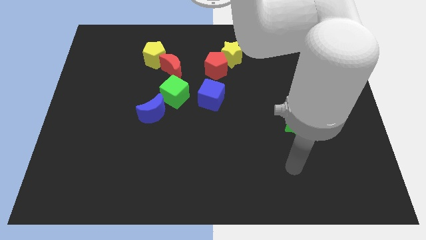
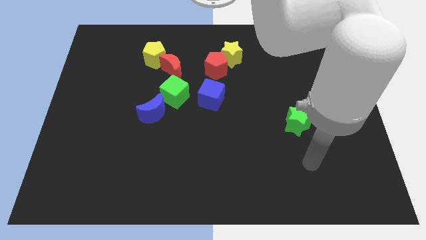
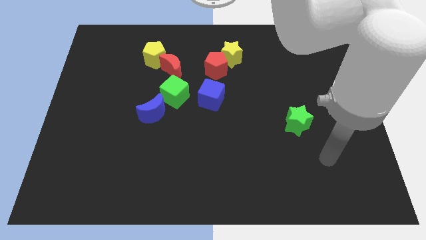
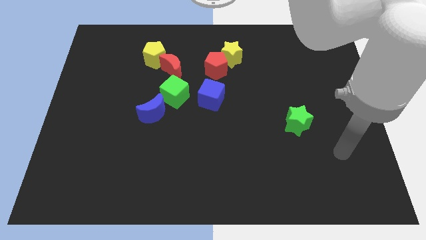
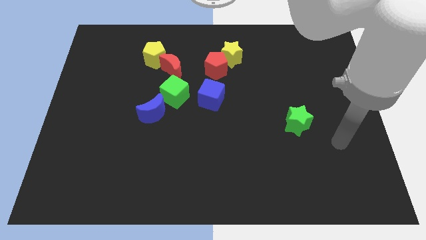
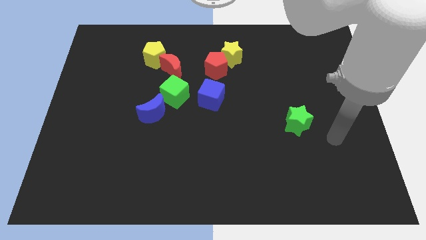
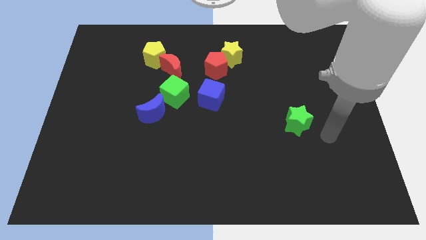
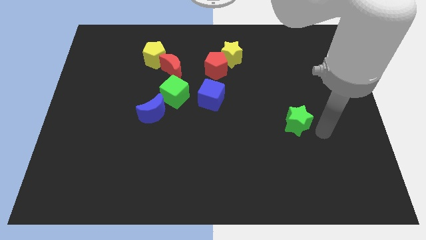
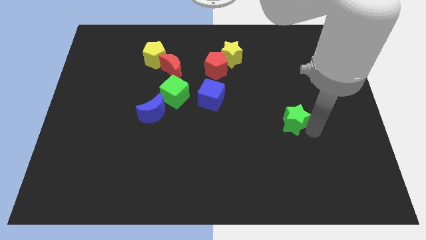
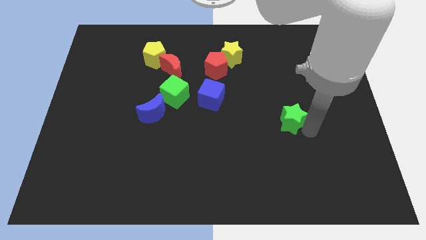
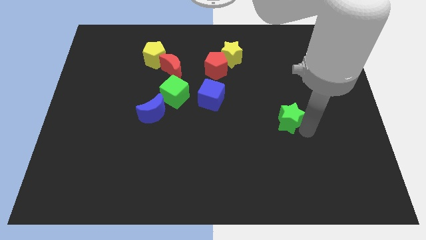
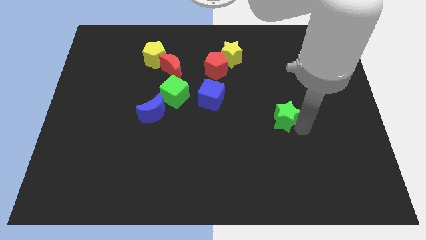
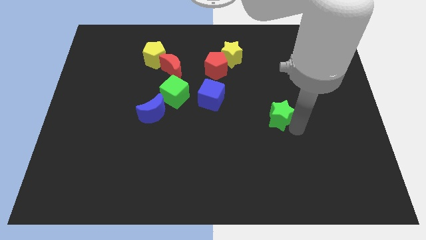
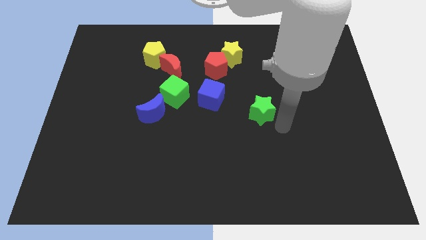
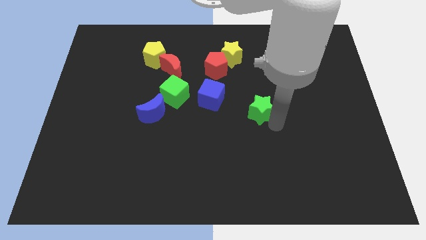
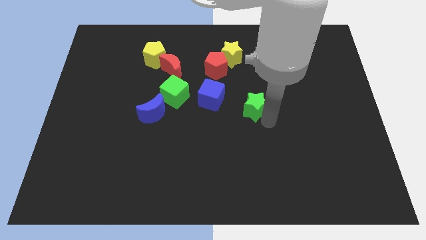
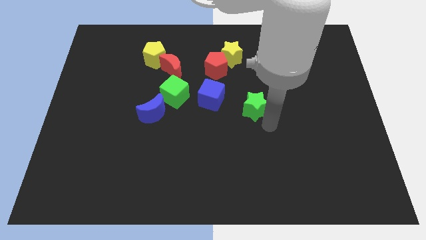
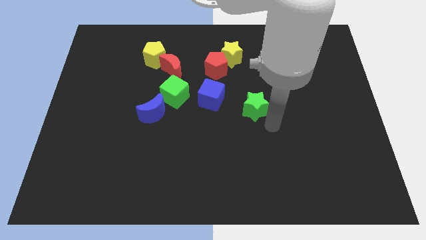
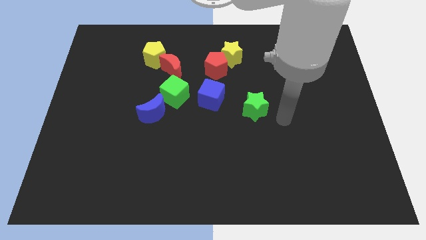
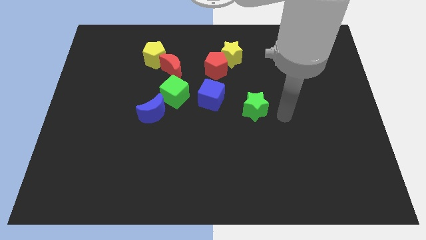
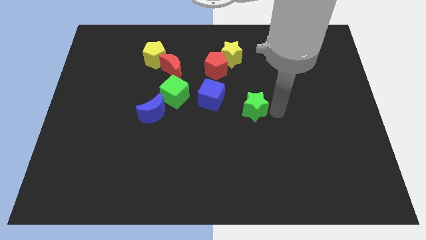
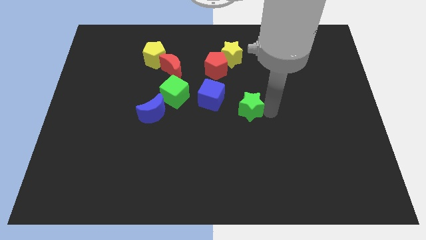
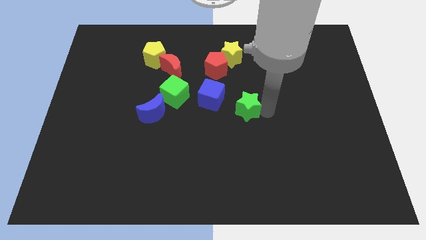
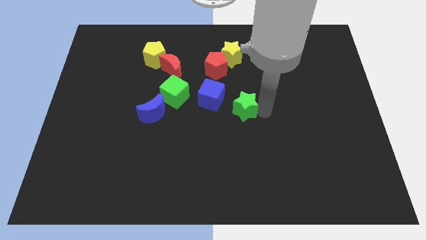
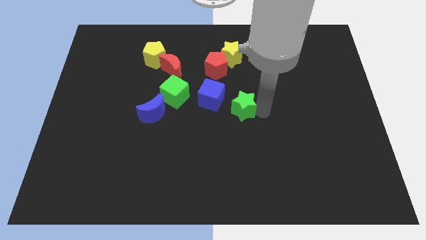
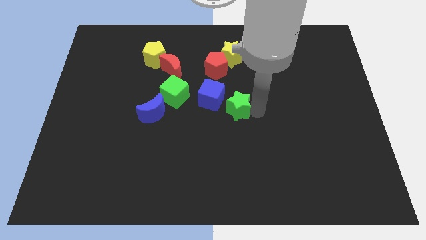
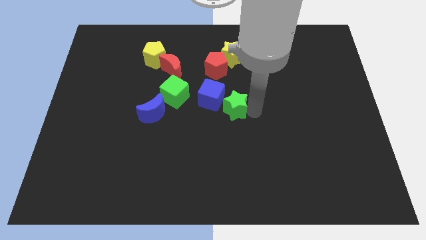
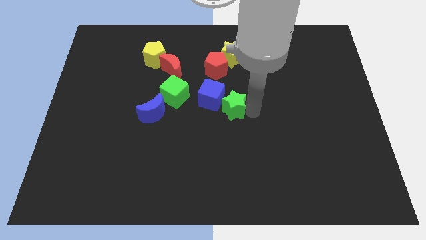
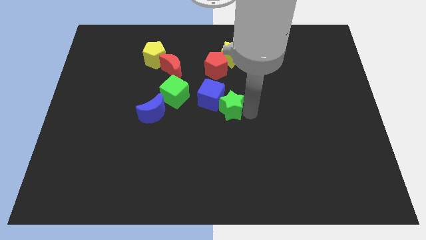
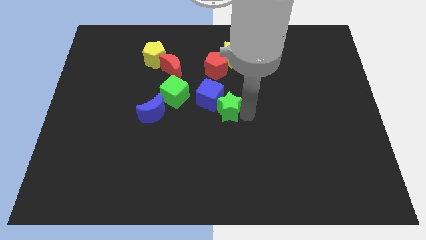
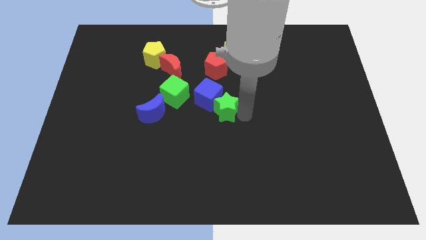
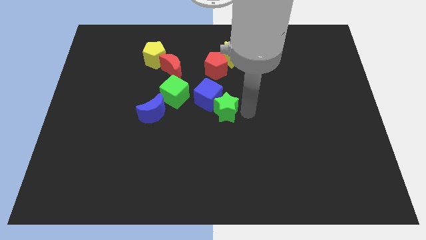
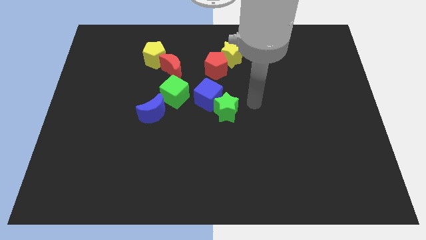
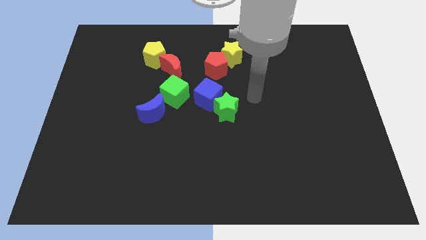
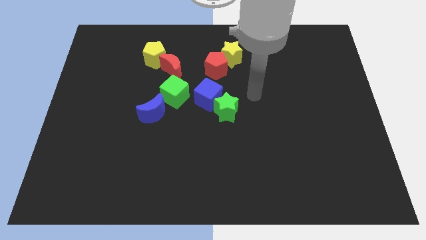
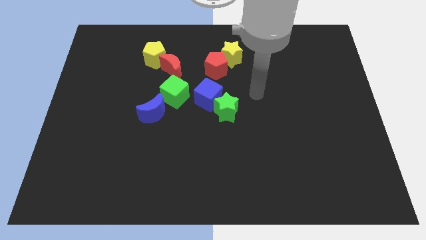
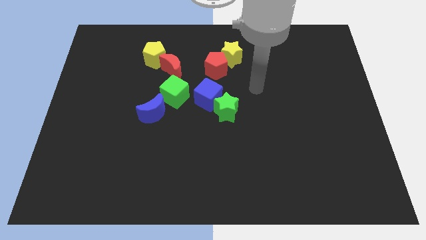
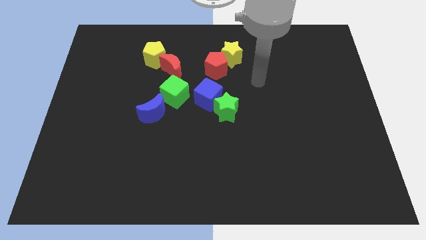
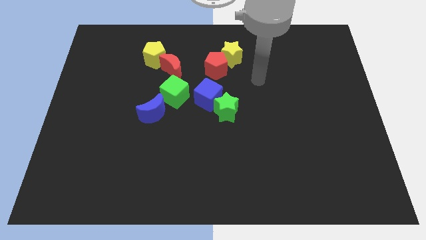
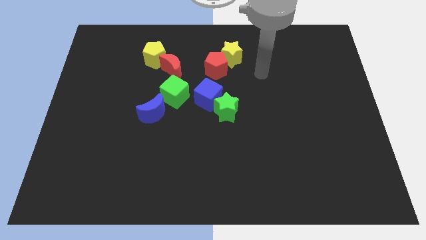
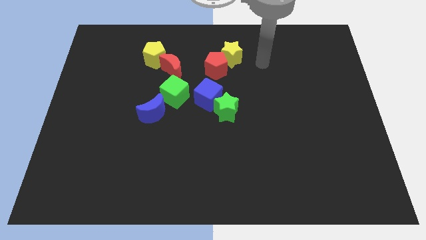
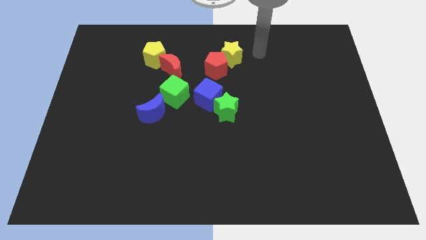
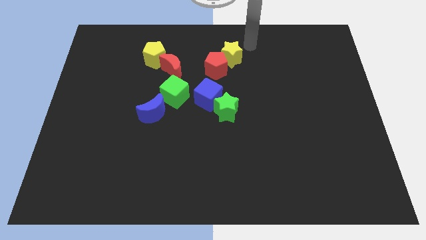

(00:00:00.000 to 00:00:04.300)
attach the green star to the blue cube

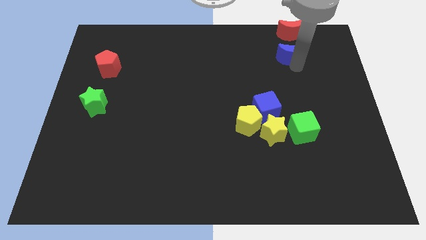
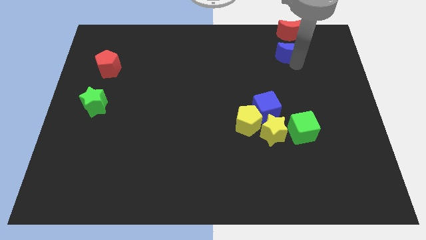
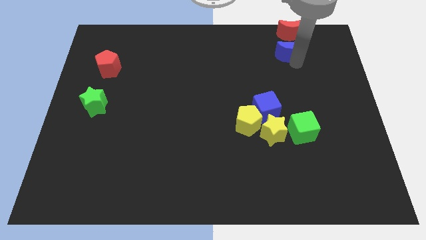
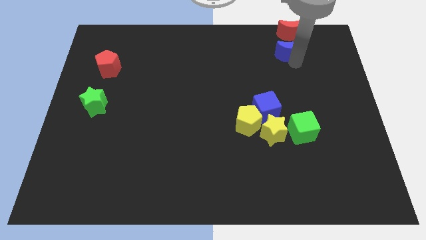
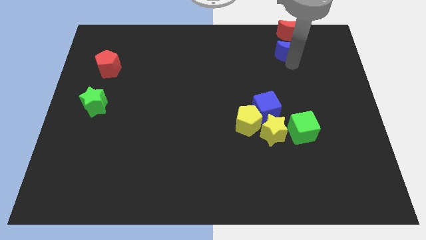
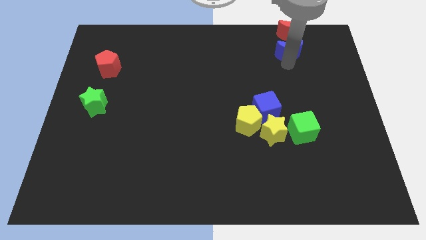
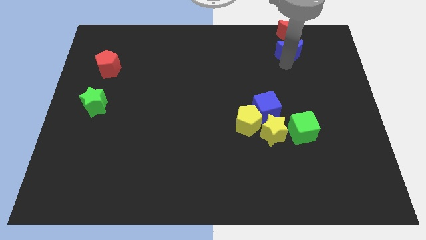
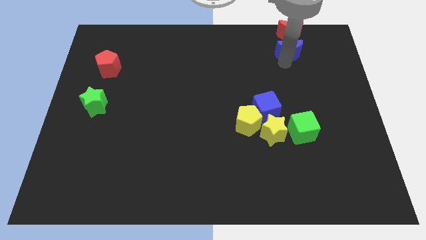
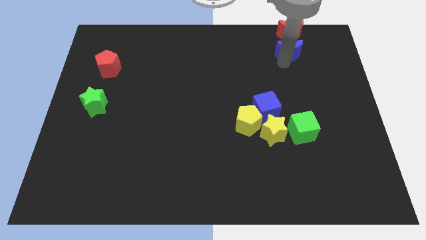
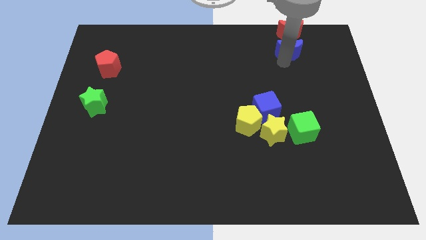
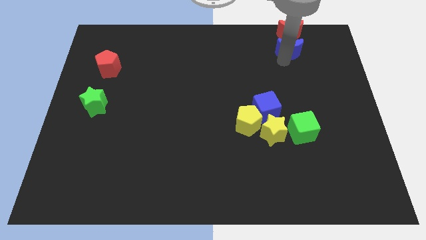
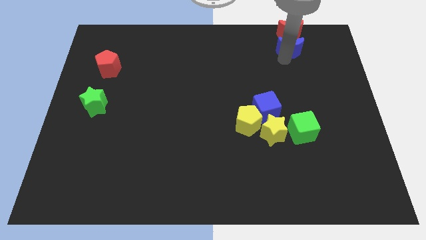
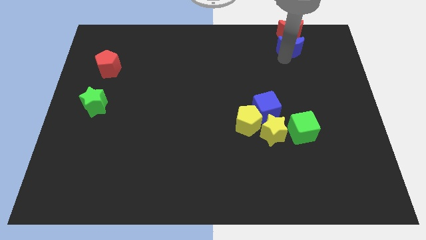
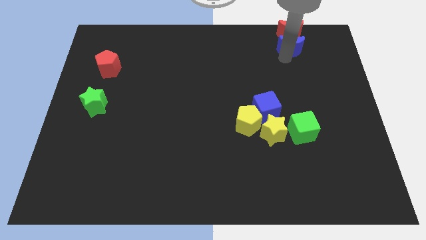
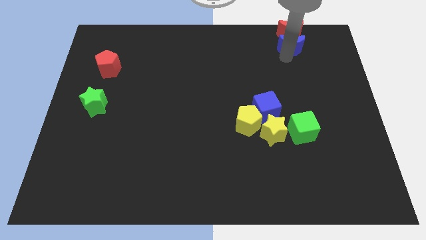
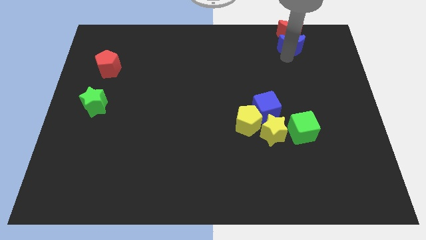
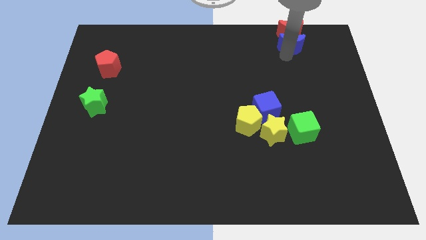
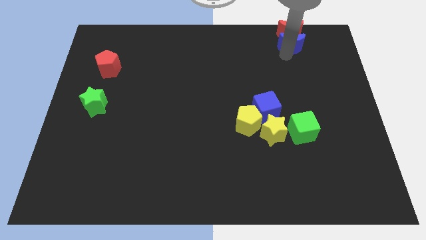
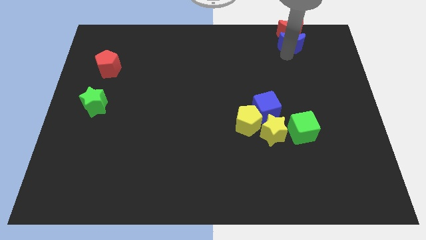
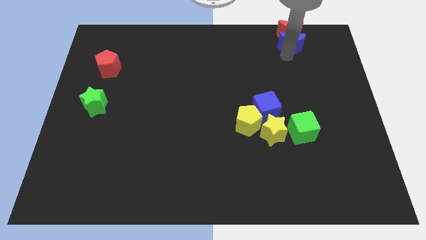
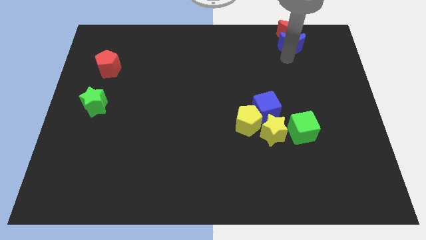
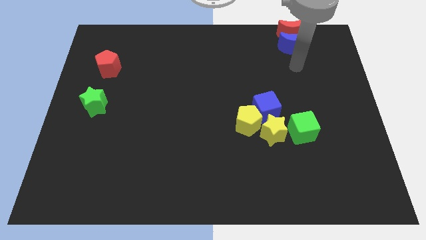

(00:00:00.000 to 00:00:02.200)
place the blue moon below the red moon

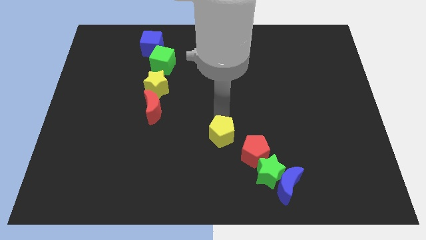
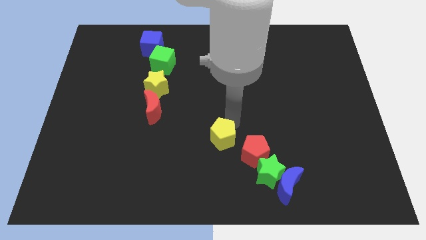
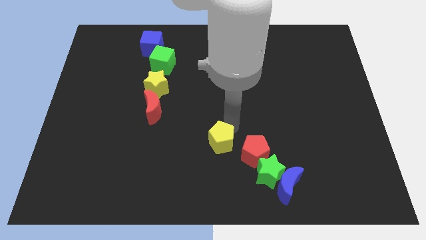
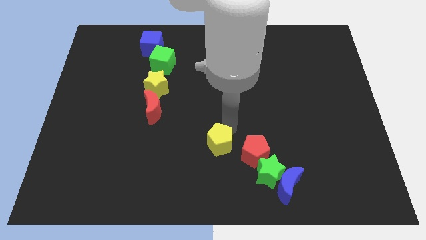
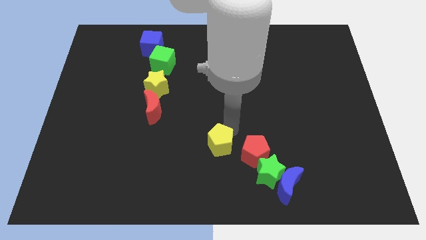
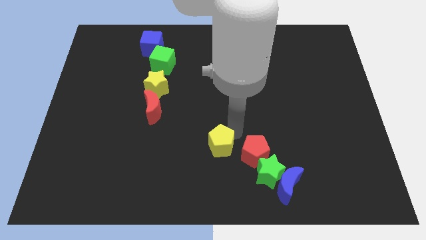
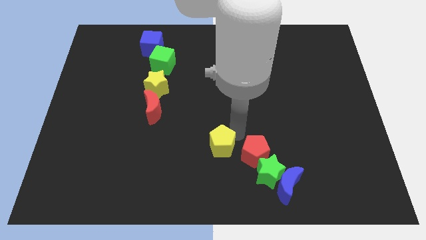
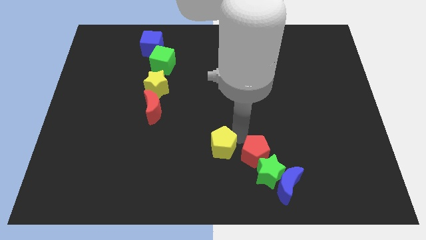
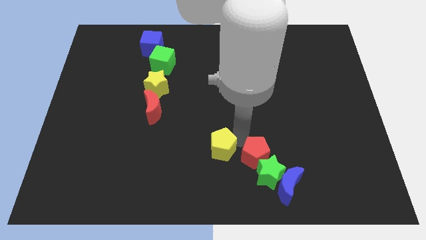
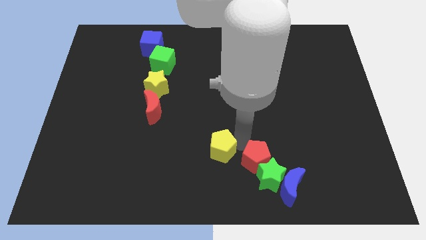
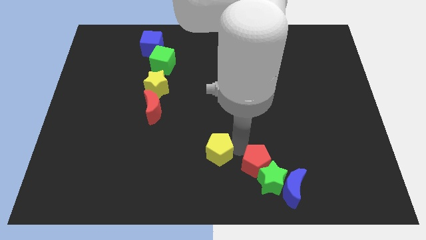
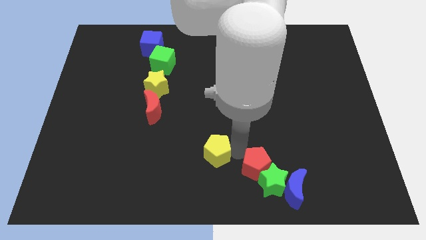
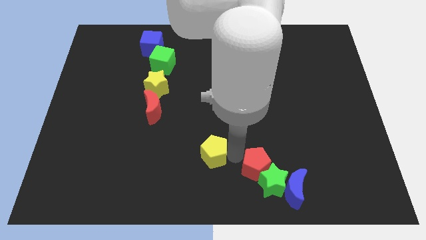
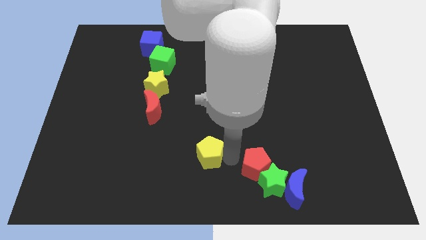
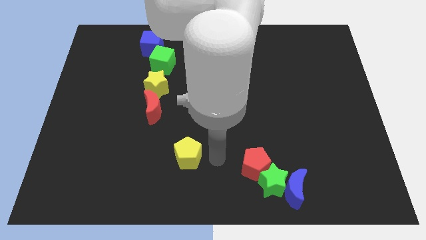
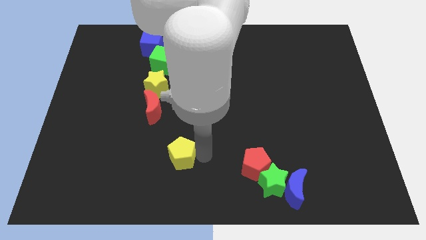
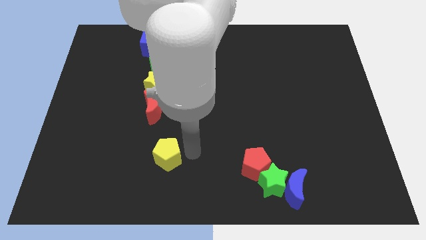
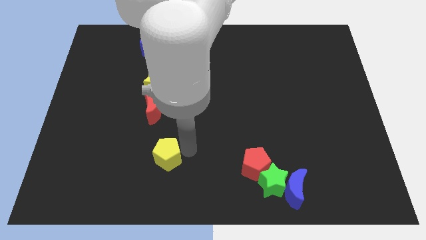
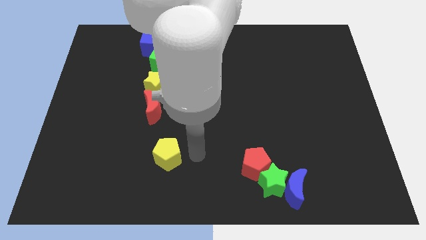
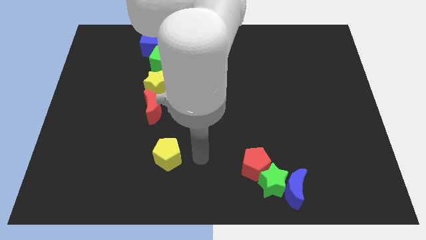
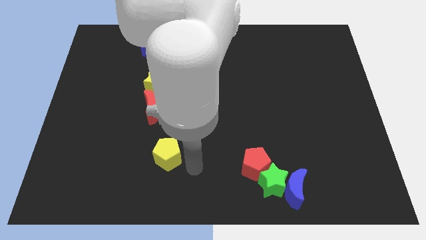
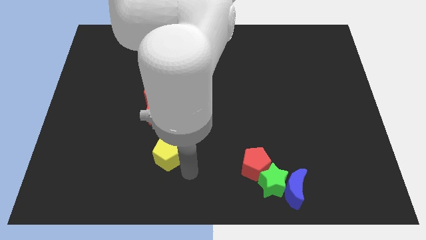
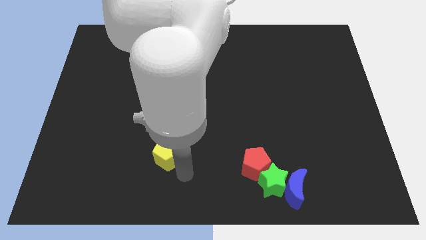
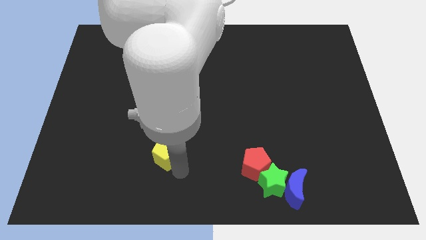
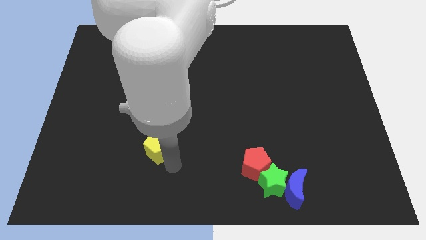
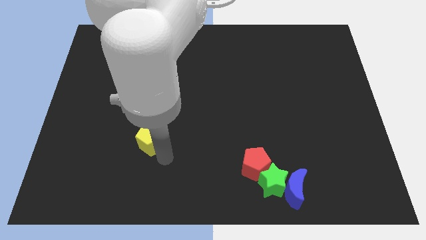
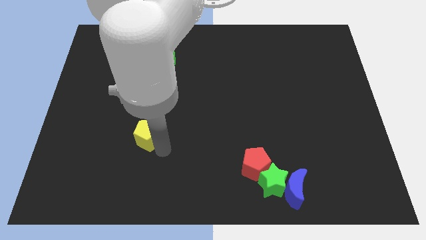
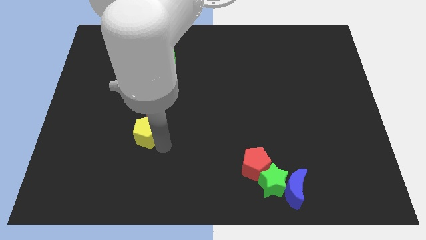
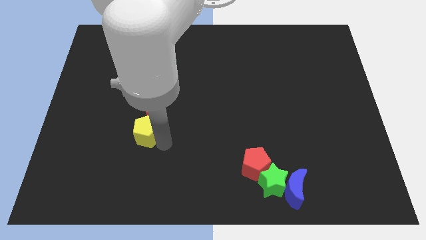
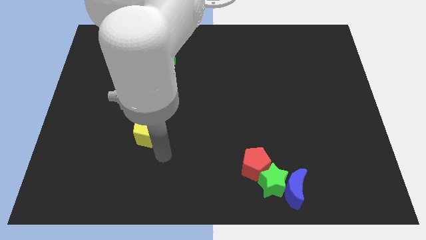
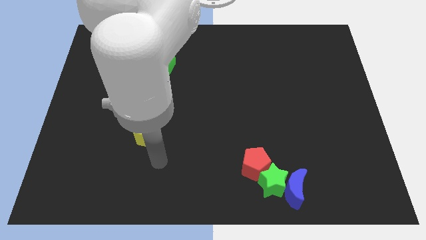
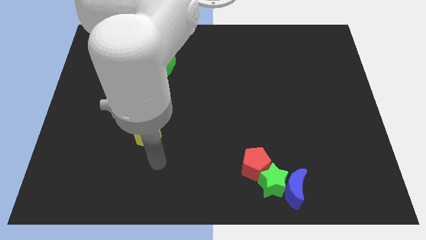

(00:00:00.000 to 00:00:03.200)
move the yellow pentagon to the top left of the red pentagon
